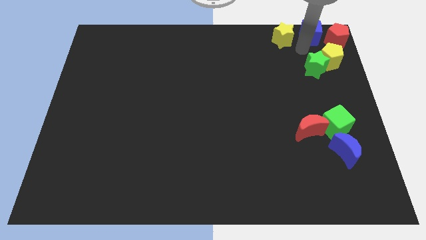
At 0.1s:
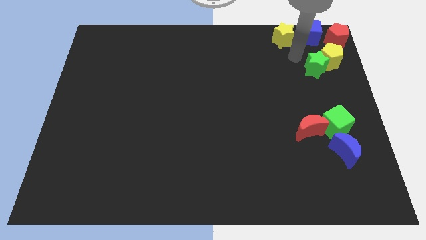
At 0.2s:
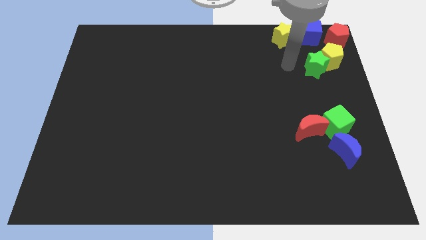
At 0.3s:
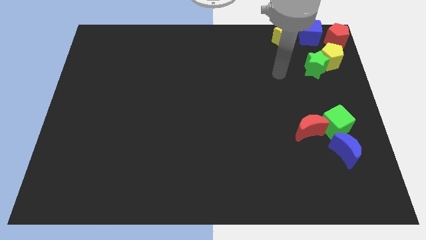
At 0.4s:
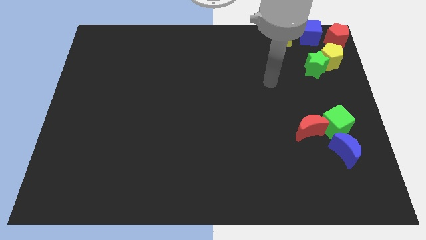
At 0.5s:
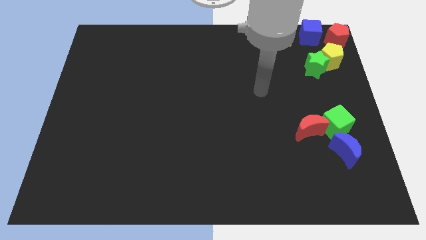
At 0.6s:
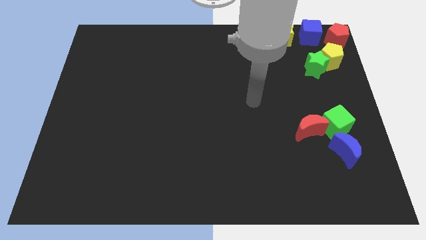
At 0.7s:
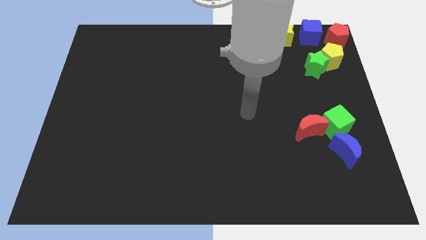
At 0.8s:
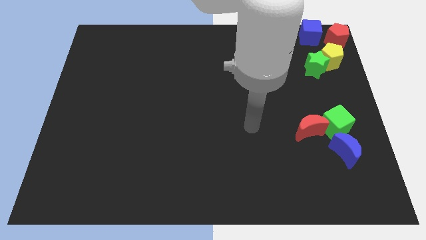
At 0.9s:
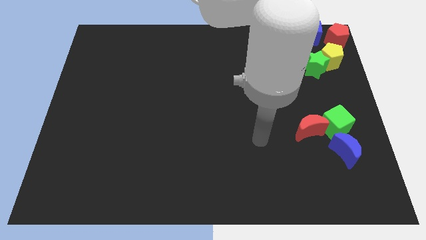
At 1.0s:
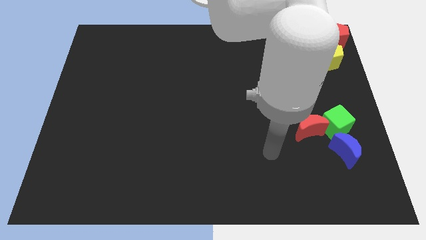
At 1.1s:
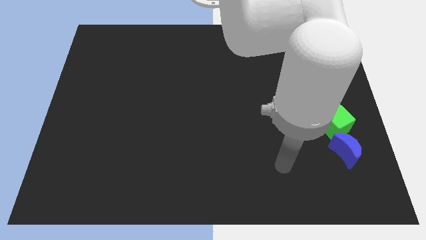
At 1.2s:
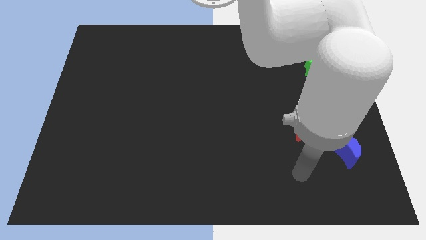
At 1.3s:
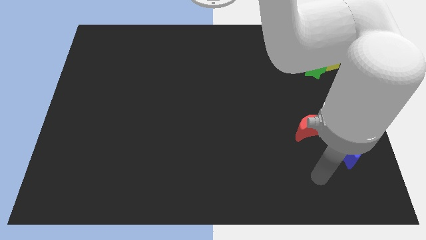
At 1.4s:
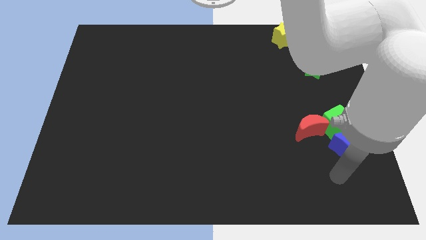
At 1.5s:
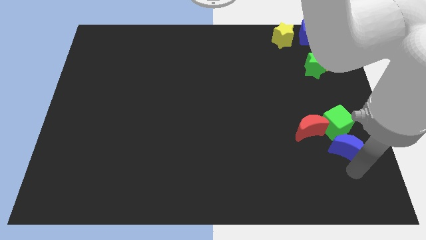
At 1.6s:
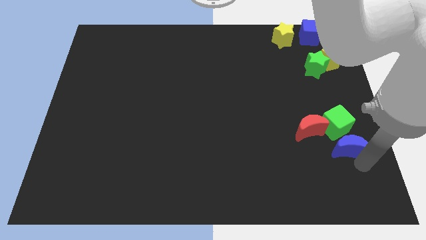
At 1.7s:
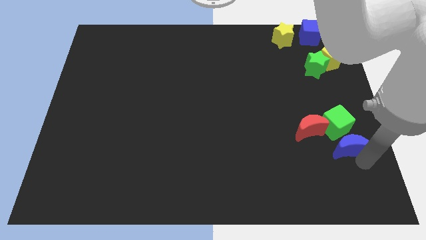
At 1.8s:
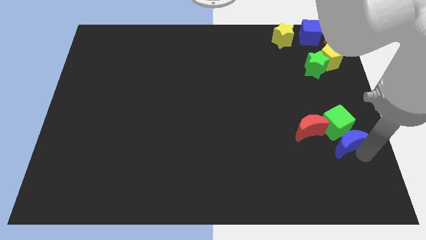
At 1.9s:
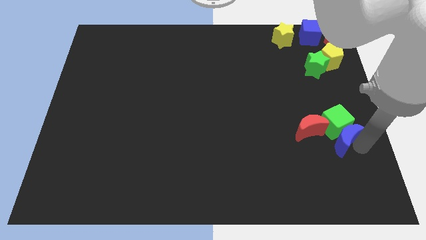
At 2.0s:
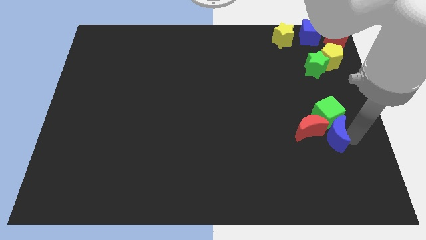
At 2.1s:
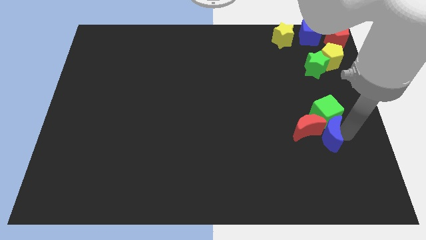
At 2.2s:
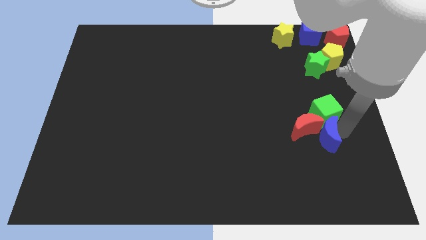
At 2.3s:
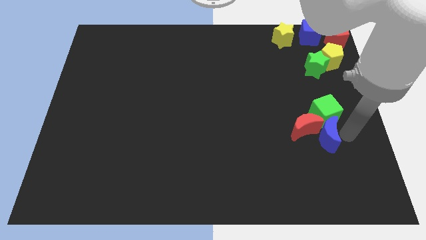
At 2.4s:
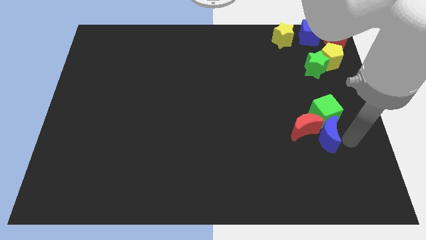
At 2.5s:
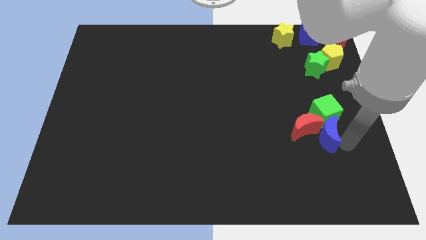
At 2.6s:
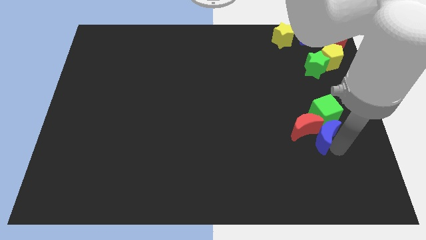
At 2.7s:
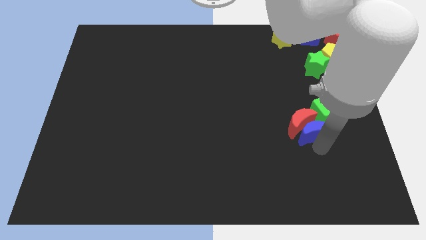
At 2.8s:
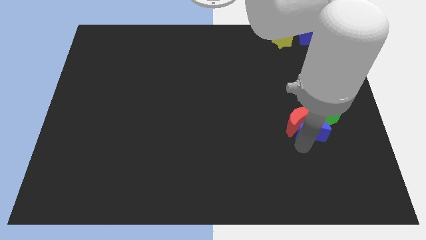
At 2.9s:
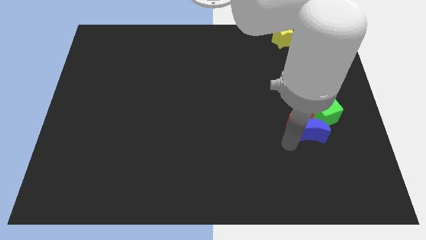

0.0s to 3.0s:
push the blue crescent into green cube

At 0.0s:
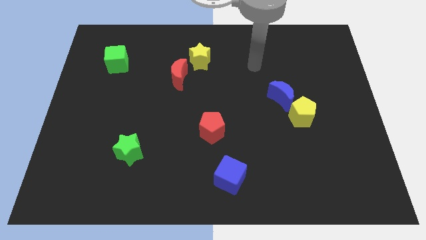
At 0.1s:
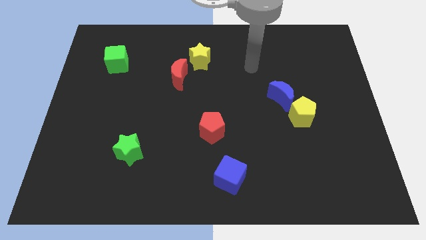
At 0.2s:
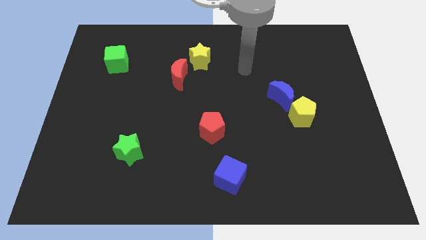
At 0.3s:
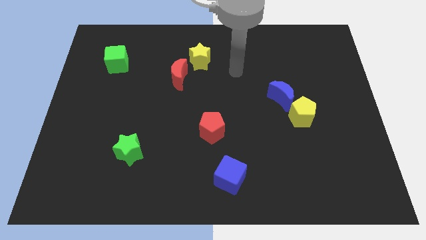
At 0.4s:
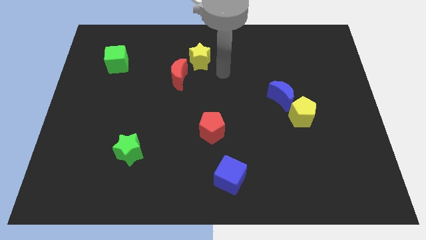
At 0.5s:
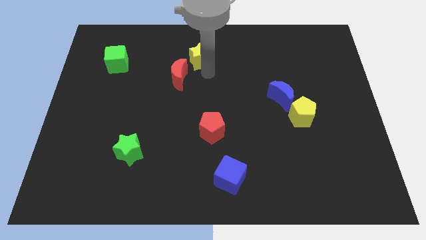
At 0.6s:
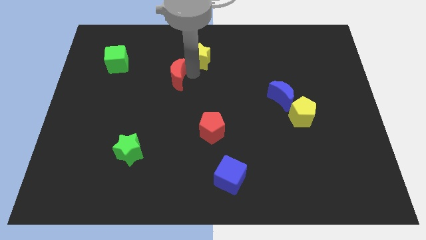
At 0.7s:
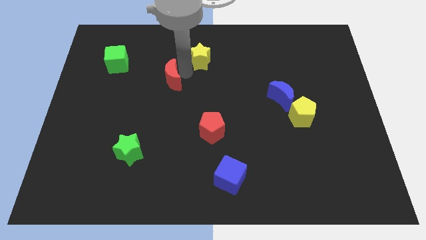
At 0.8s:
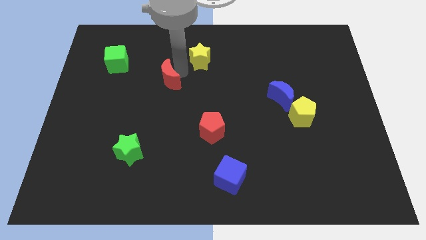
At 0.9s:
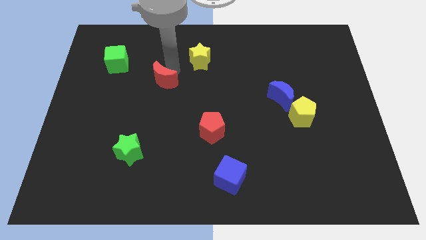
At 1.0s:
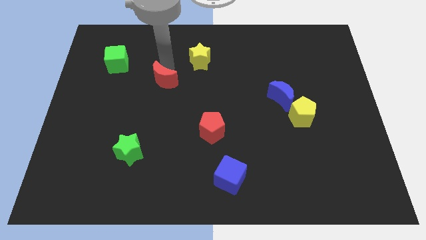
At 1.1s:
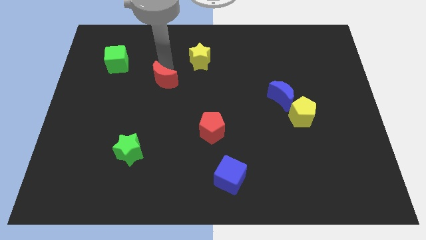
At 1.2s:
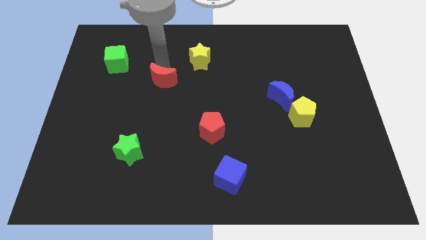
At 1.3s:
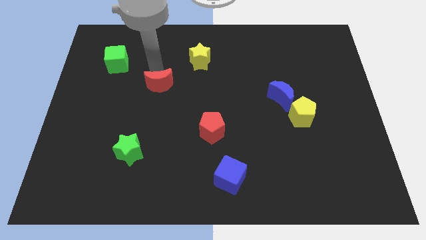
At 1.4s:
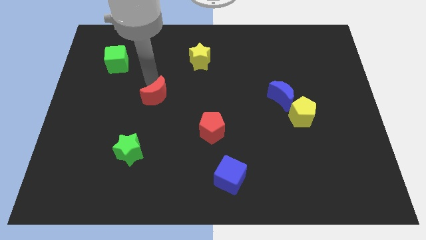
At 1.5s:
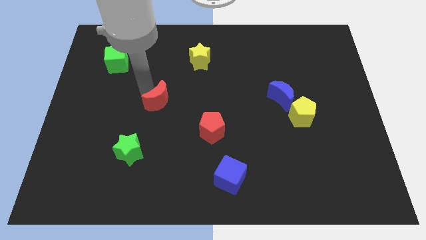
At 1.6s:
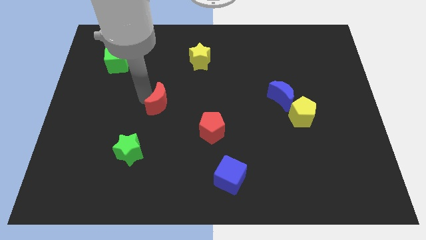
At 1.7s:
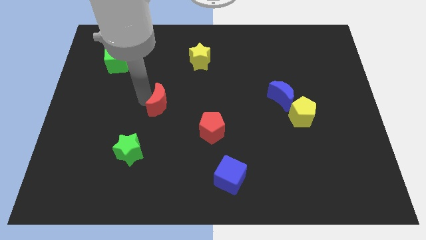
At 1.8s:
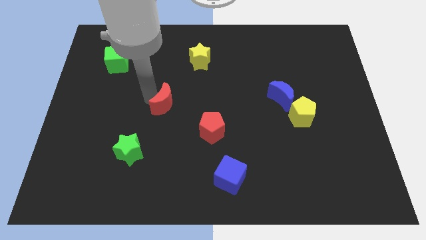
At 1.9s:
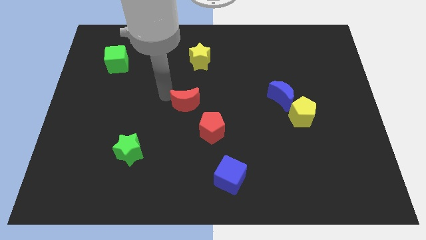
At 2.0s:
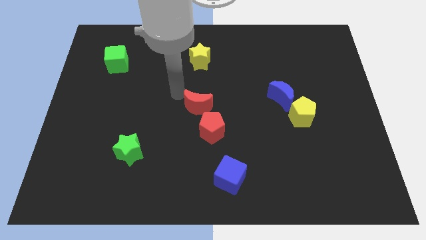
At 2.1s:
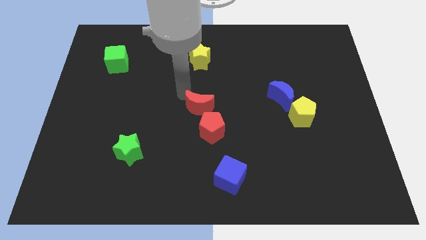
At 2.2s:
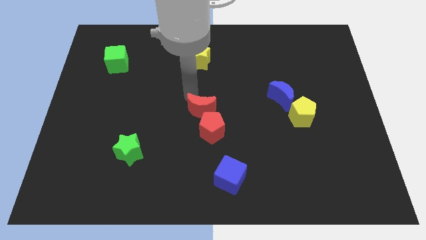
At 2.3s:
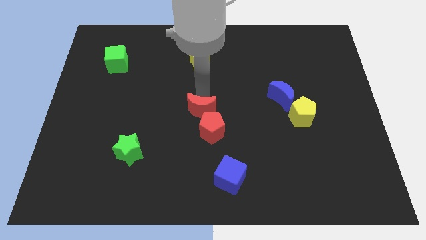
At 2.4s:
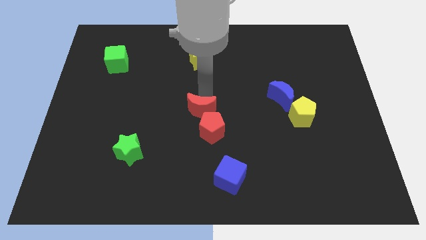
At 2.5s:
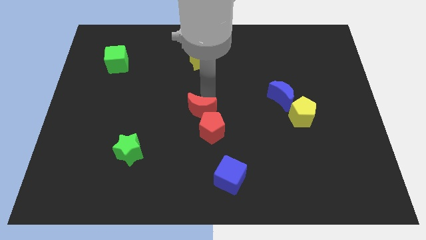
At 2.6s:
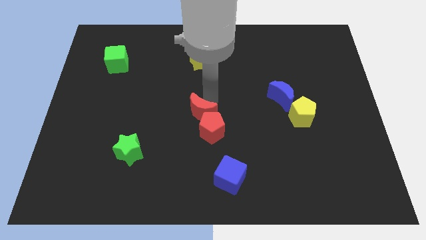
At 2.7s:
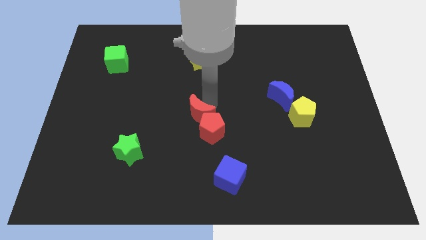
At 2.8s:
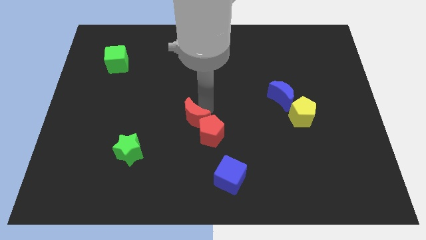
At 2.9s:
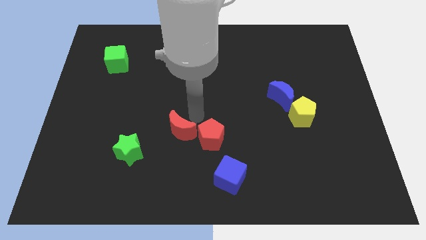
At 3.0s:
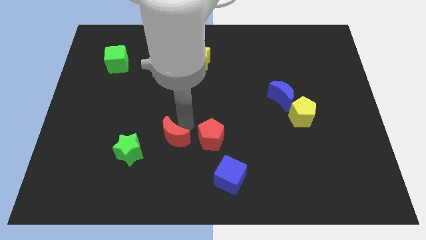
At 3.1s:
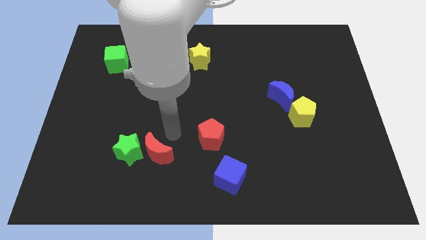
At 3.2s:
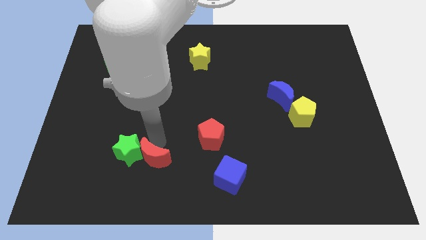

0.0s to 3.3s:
push red crescent beside green star

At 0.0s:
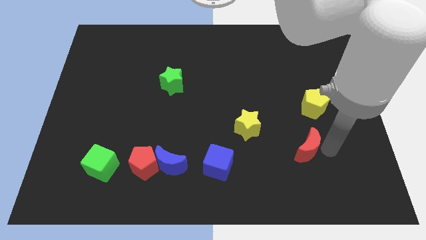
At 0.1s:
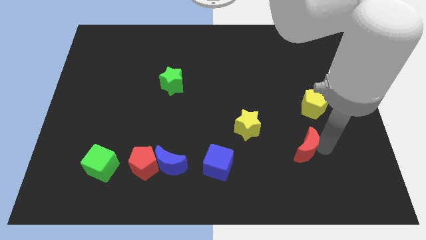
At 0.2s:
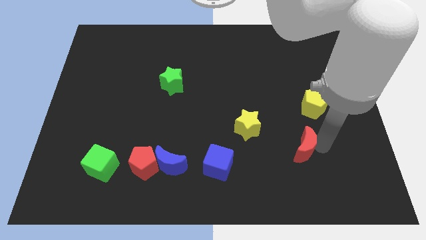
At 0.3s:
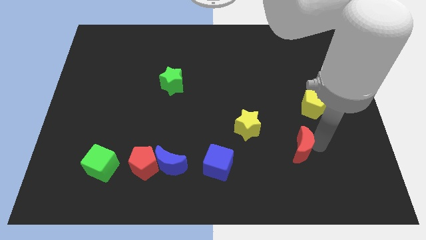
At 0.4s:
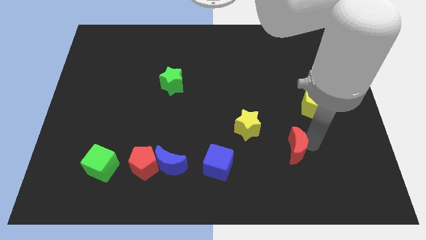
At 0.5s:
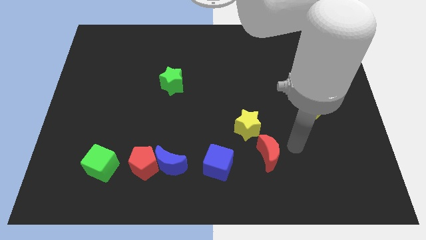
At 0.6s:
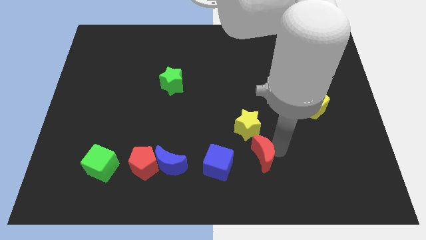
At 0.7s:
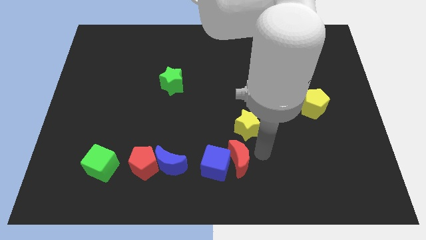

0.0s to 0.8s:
push red crescent below yellow star

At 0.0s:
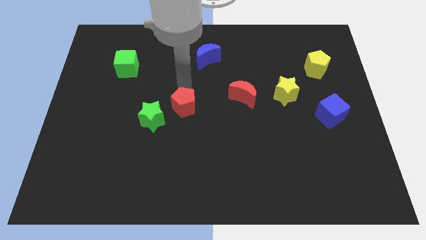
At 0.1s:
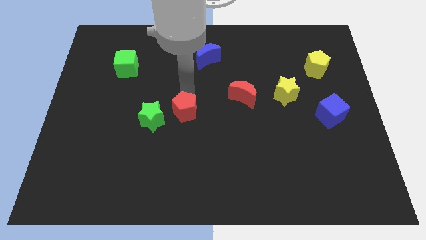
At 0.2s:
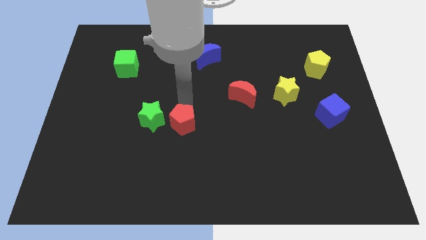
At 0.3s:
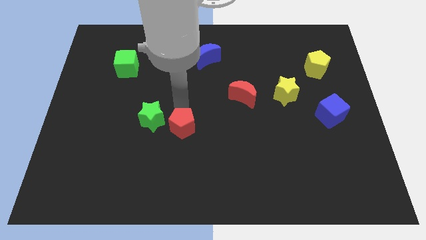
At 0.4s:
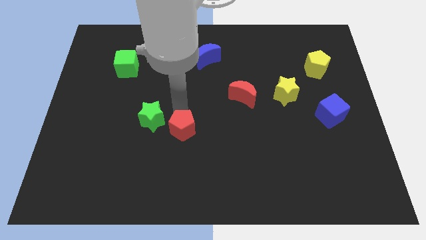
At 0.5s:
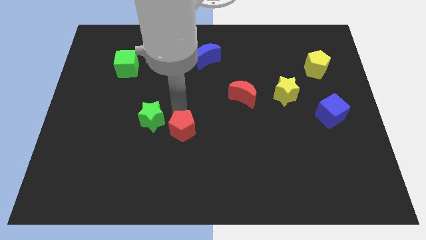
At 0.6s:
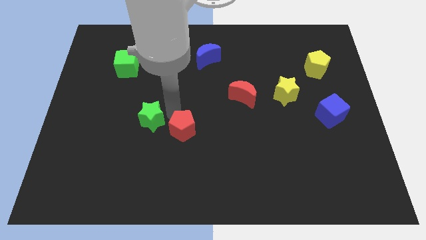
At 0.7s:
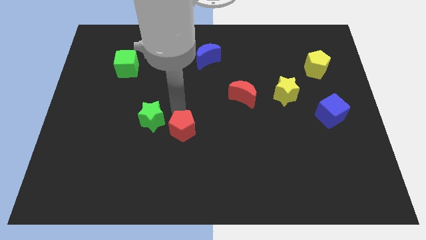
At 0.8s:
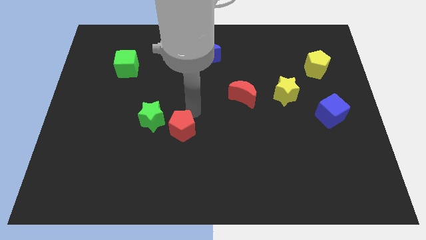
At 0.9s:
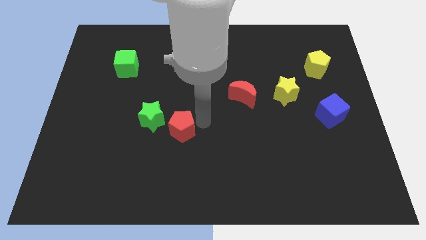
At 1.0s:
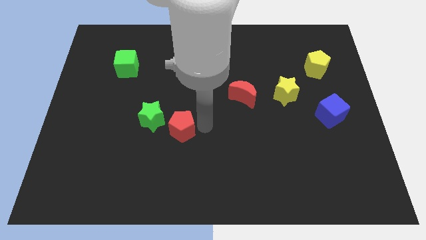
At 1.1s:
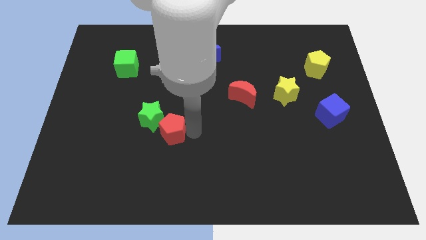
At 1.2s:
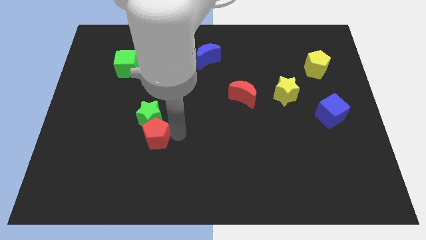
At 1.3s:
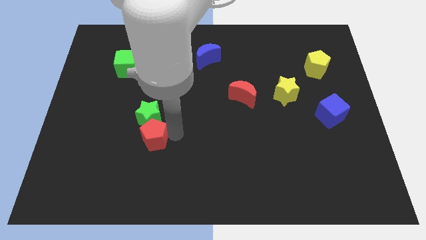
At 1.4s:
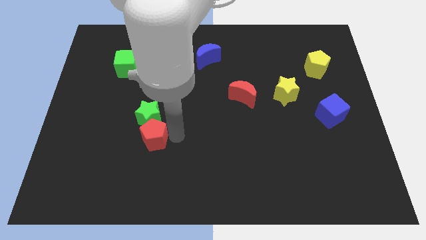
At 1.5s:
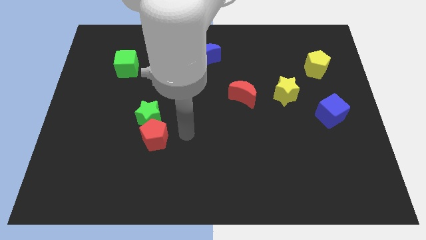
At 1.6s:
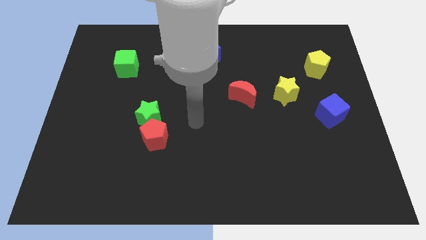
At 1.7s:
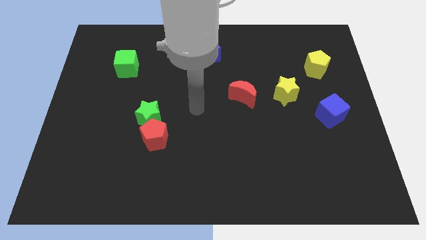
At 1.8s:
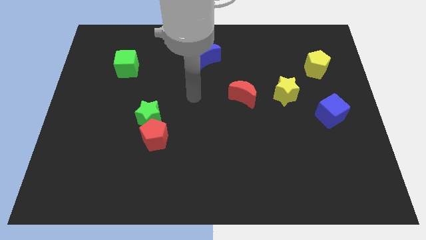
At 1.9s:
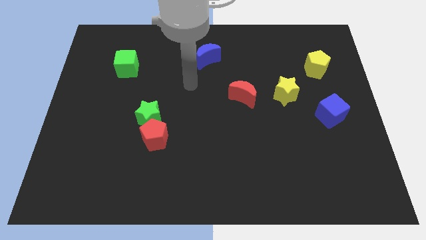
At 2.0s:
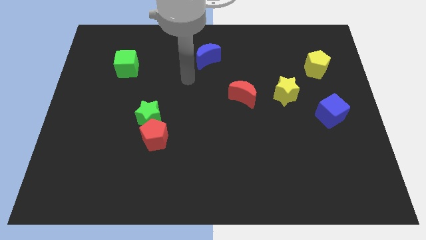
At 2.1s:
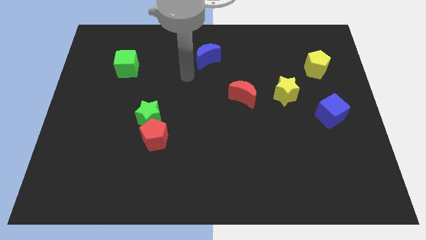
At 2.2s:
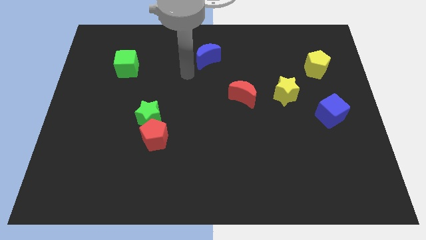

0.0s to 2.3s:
move the red pentagon into the green star
